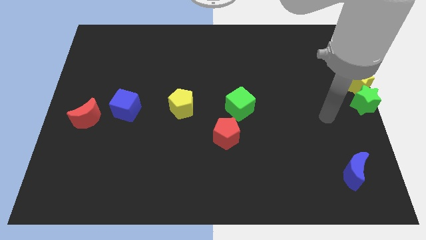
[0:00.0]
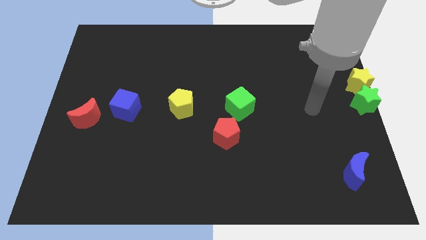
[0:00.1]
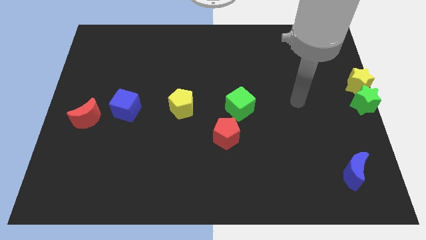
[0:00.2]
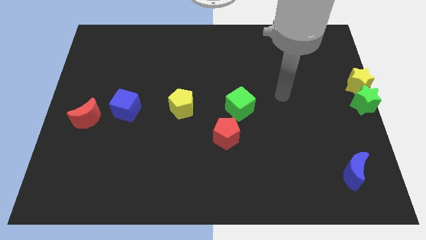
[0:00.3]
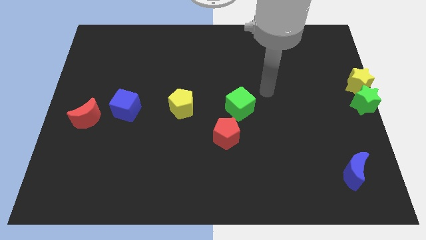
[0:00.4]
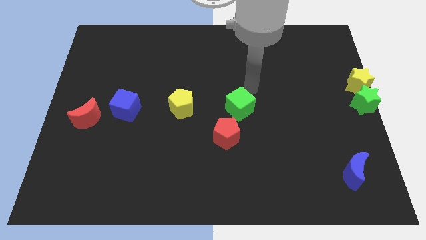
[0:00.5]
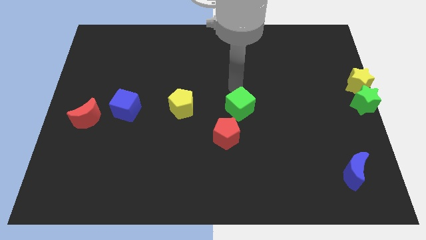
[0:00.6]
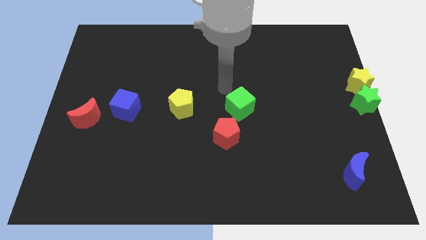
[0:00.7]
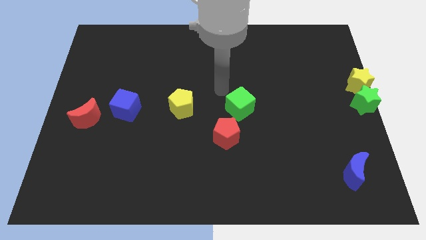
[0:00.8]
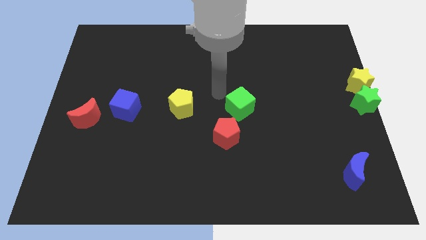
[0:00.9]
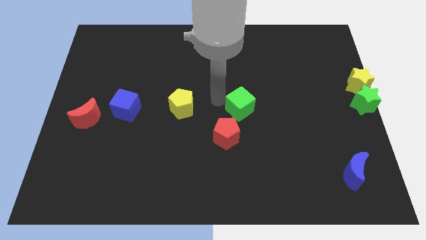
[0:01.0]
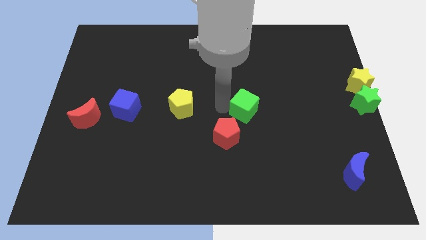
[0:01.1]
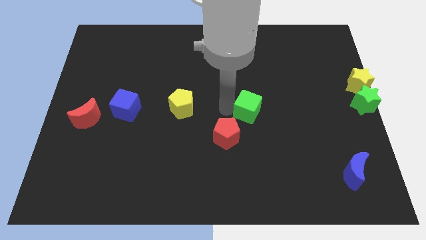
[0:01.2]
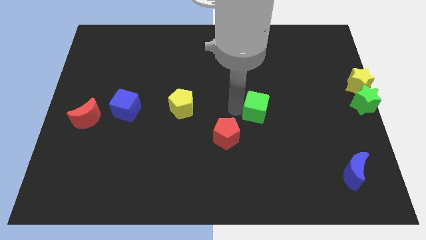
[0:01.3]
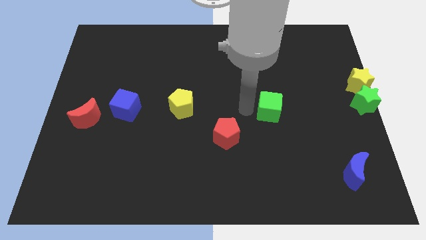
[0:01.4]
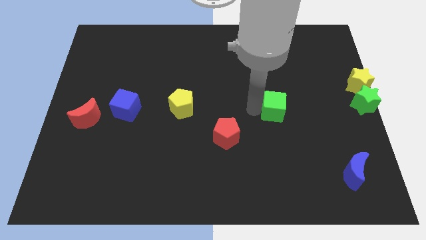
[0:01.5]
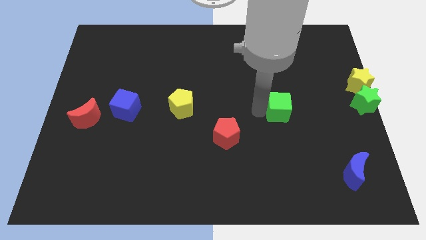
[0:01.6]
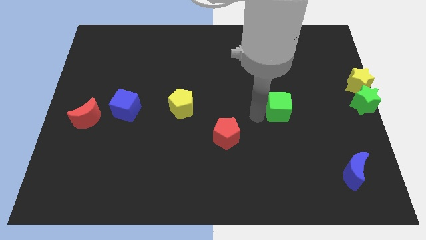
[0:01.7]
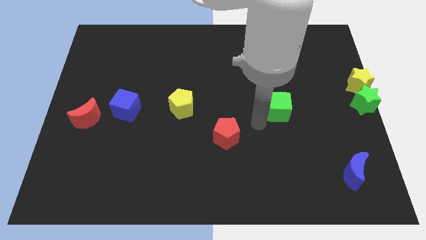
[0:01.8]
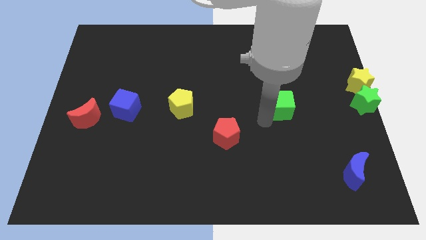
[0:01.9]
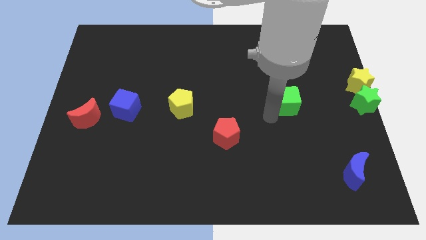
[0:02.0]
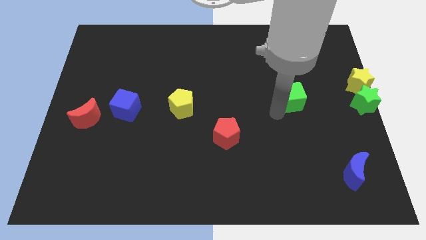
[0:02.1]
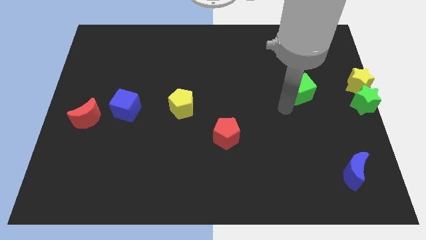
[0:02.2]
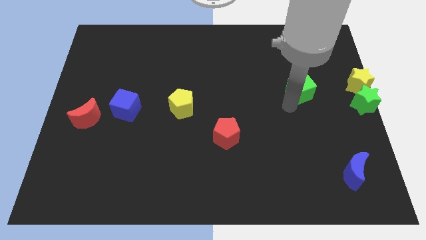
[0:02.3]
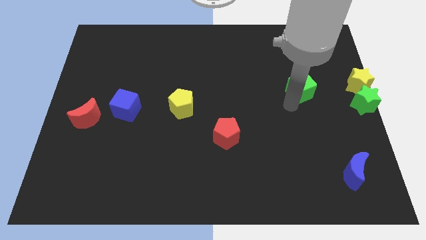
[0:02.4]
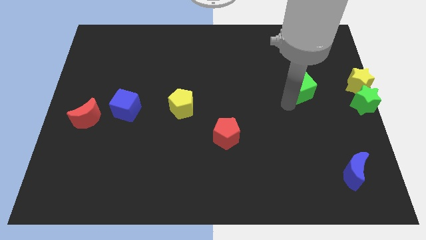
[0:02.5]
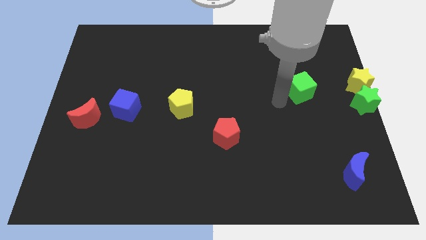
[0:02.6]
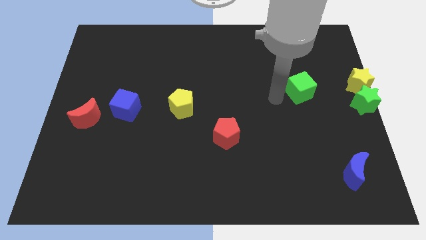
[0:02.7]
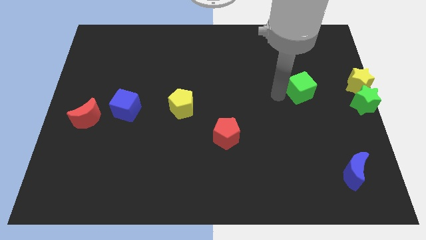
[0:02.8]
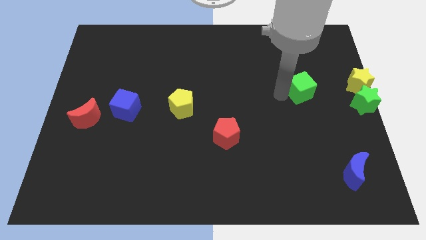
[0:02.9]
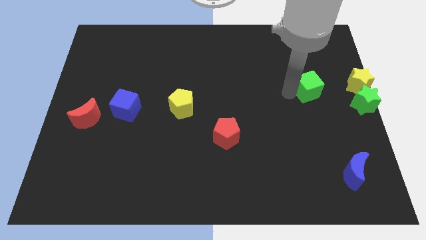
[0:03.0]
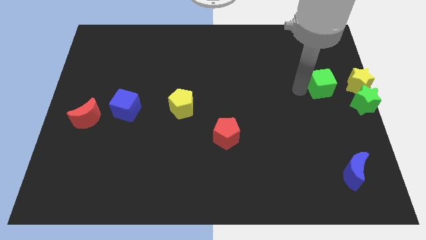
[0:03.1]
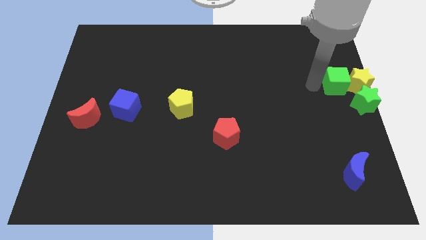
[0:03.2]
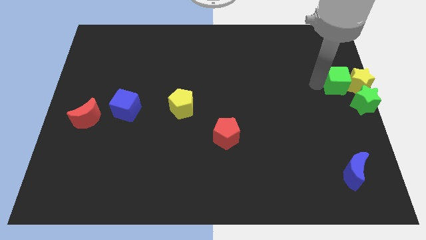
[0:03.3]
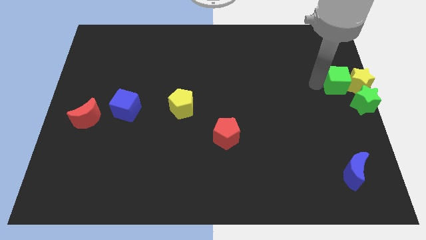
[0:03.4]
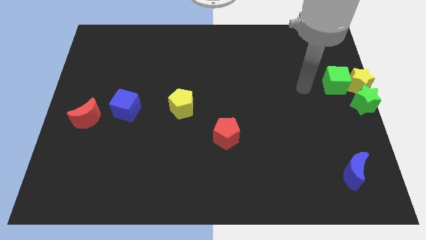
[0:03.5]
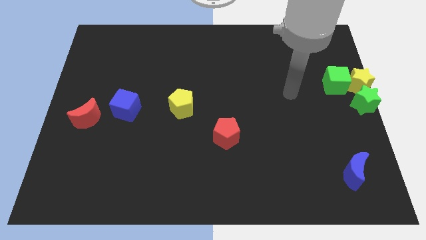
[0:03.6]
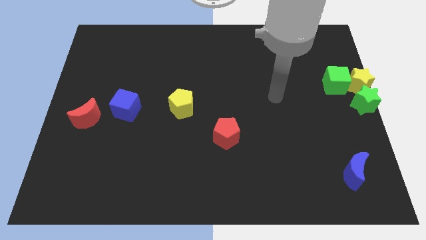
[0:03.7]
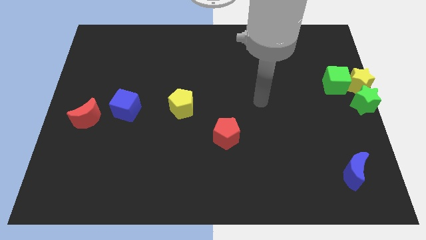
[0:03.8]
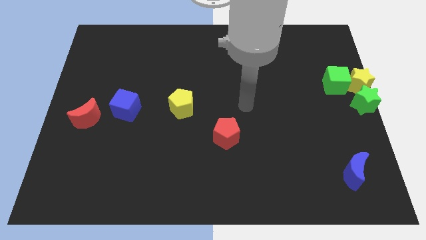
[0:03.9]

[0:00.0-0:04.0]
move the green cube to the left of the yellow star

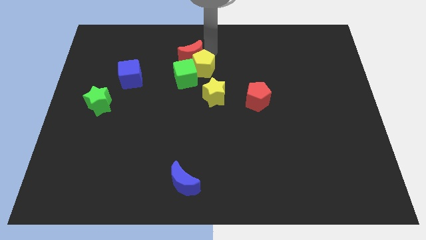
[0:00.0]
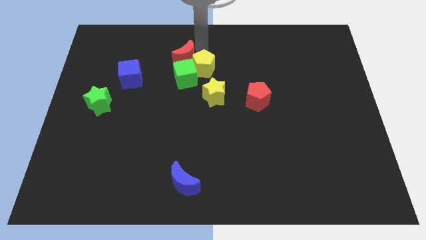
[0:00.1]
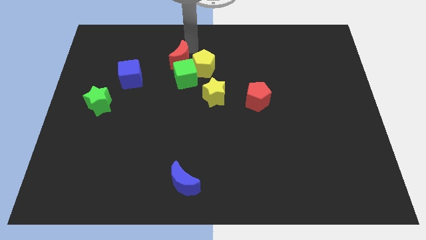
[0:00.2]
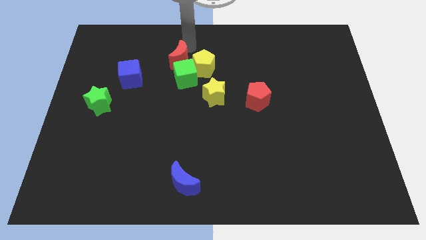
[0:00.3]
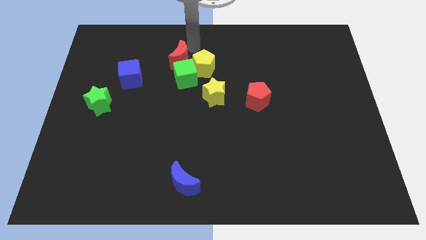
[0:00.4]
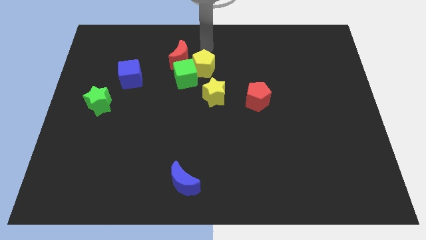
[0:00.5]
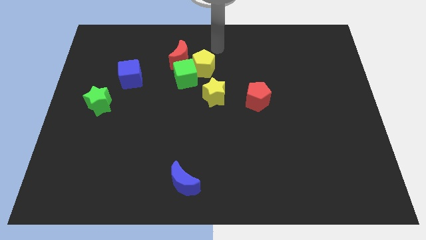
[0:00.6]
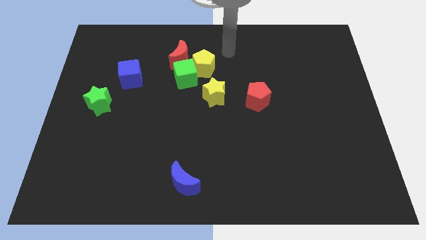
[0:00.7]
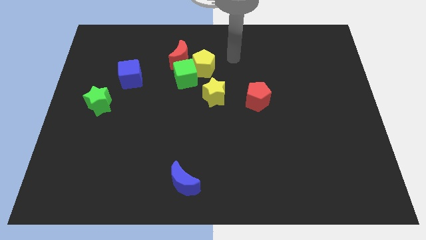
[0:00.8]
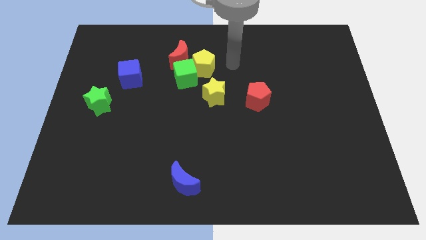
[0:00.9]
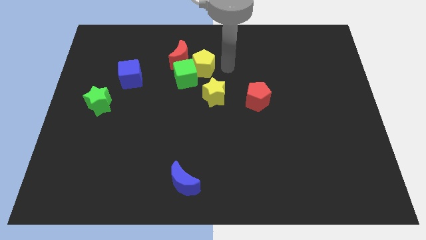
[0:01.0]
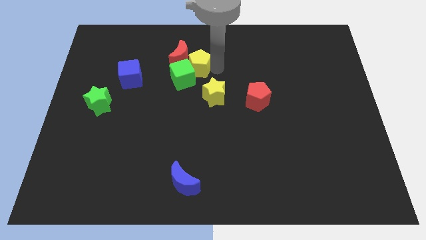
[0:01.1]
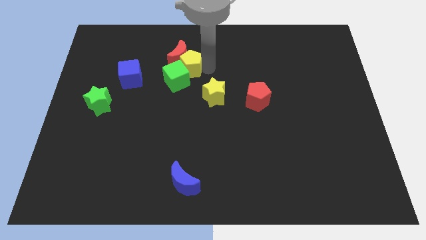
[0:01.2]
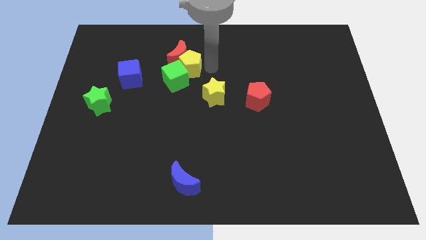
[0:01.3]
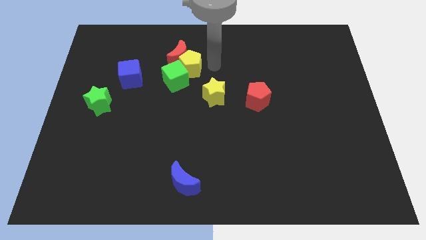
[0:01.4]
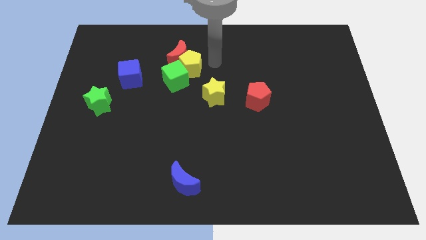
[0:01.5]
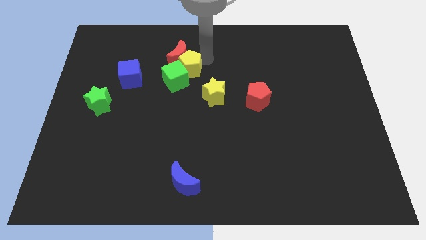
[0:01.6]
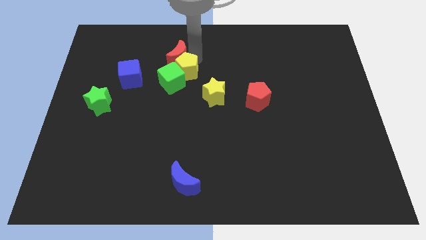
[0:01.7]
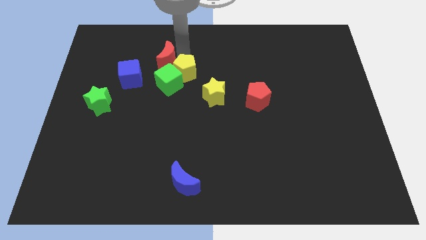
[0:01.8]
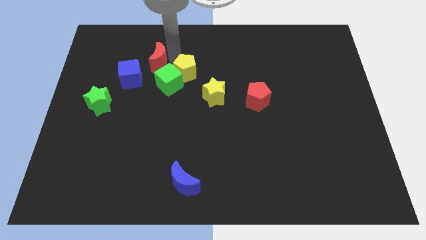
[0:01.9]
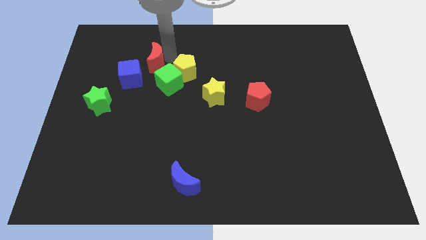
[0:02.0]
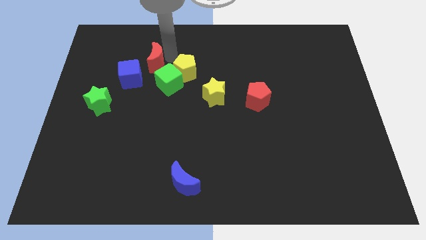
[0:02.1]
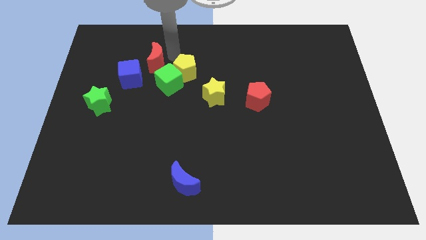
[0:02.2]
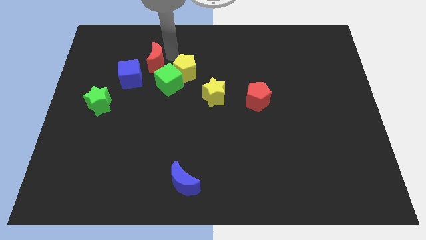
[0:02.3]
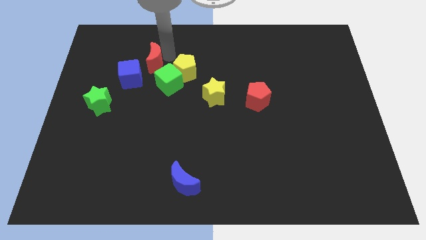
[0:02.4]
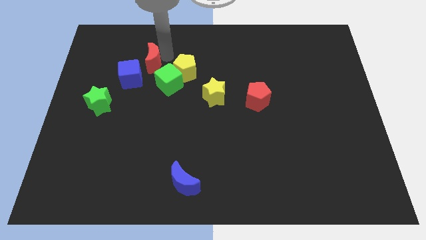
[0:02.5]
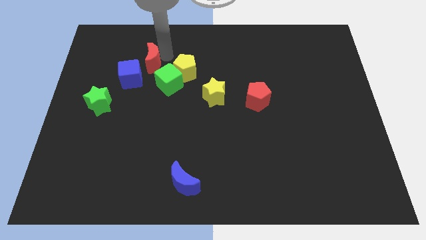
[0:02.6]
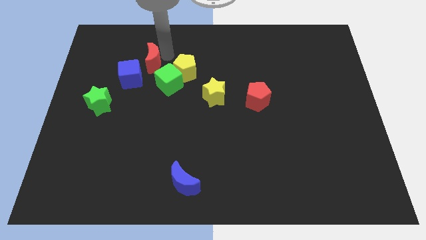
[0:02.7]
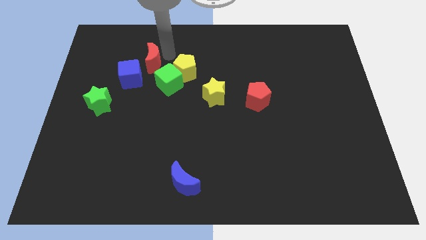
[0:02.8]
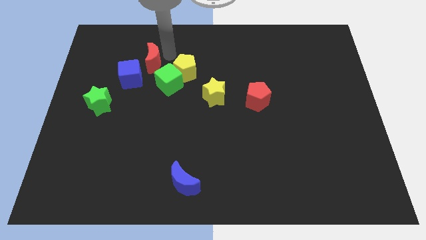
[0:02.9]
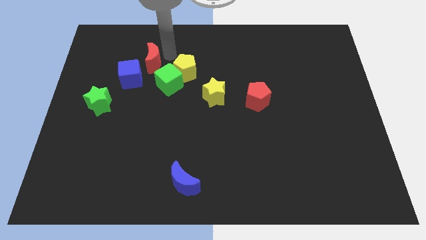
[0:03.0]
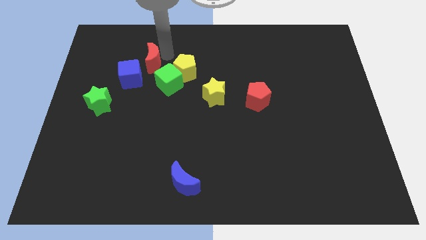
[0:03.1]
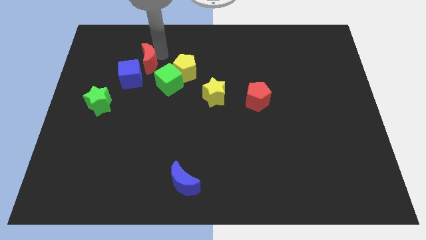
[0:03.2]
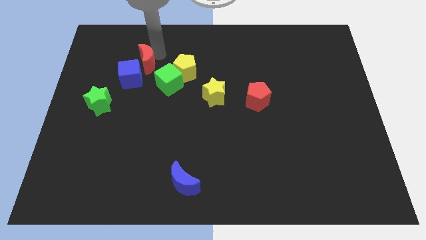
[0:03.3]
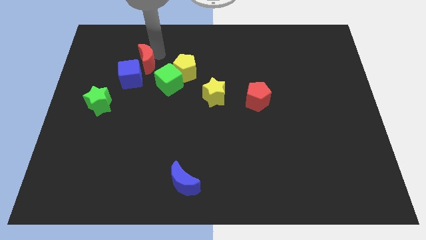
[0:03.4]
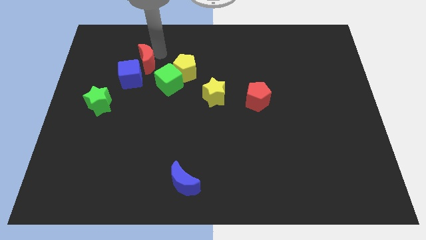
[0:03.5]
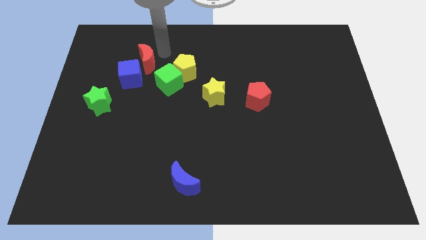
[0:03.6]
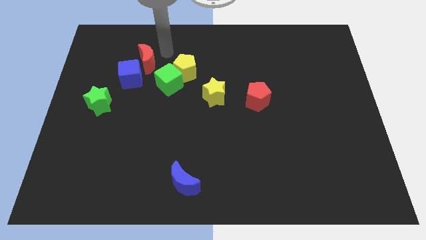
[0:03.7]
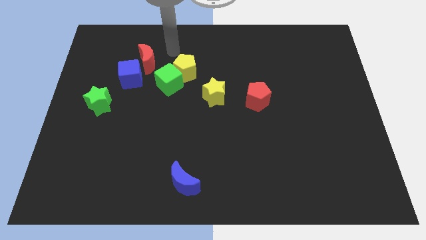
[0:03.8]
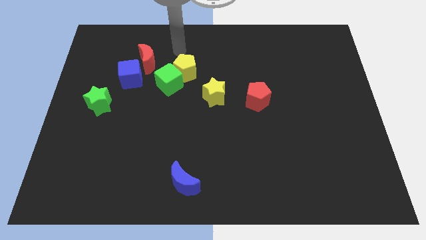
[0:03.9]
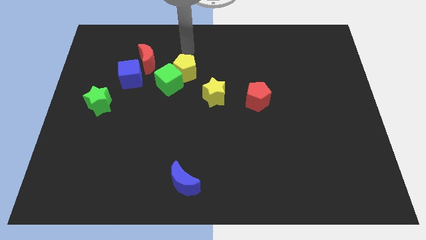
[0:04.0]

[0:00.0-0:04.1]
move red crescent towards the blue cube

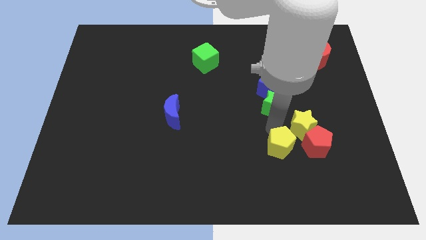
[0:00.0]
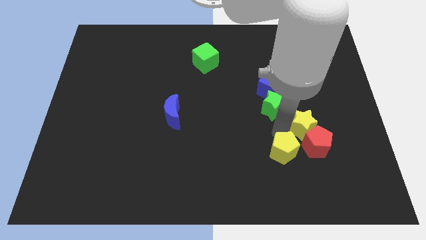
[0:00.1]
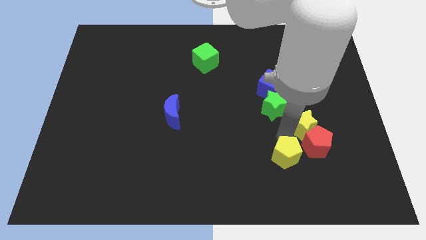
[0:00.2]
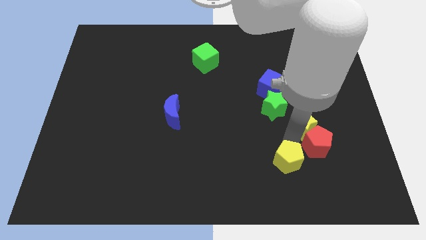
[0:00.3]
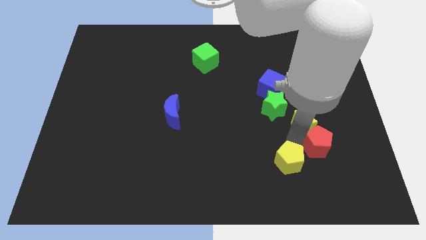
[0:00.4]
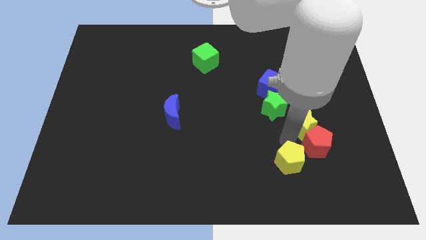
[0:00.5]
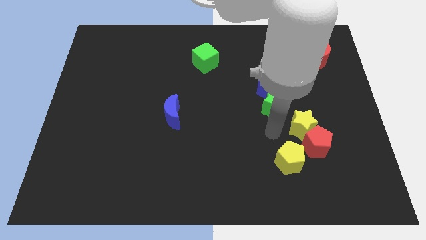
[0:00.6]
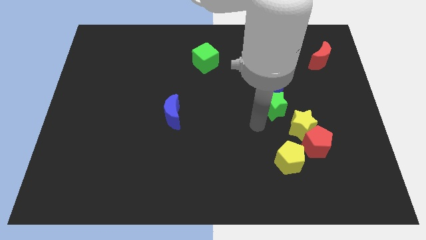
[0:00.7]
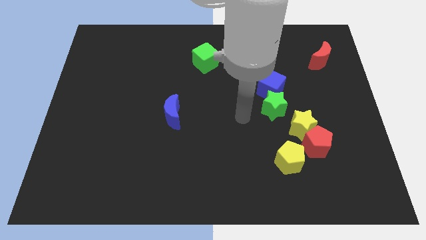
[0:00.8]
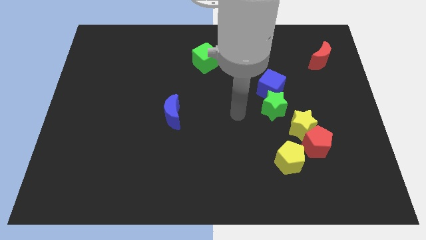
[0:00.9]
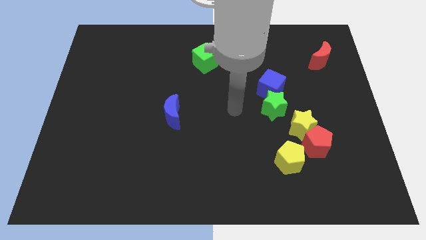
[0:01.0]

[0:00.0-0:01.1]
put the yellow pentagon diagonally to yellow star
